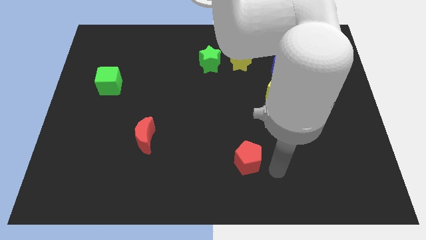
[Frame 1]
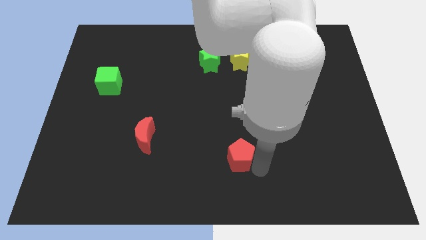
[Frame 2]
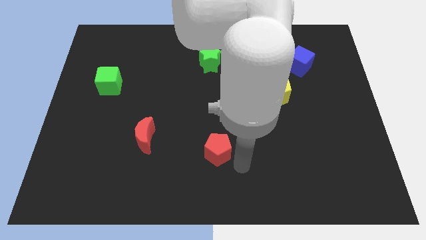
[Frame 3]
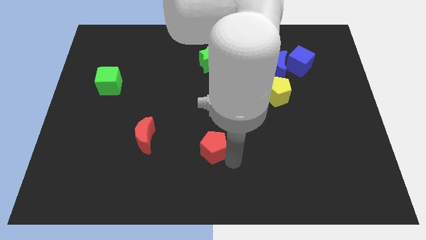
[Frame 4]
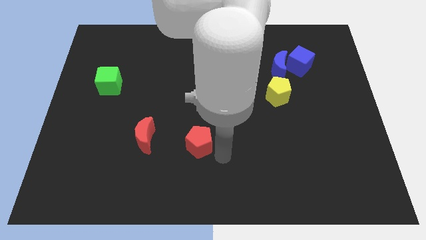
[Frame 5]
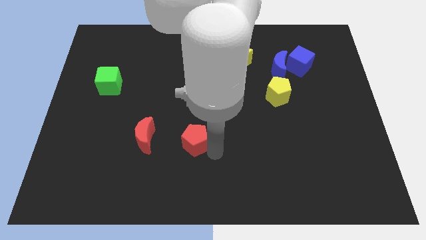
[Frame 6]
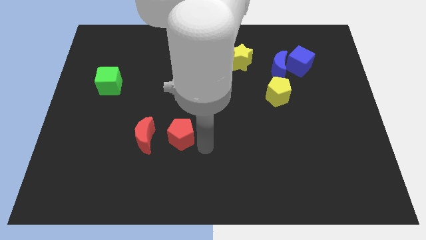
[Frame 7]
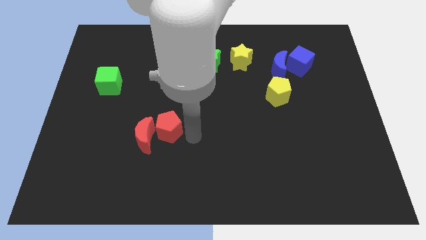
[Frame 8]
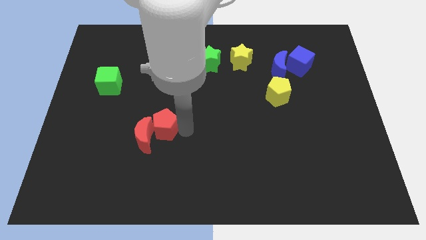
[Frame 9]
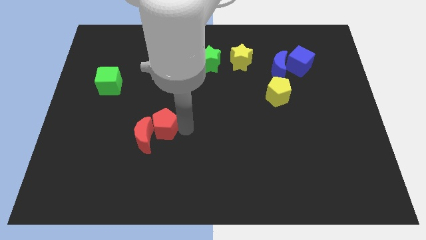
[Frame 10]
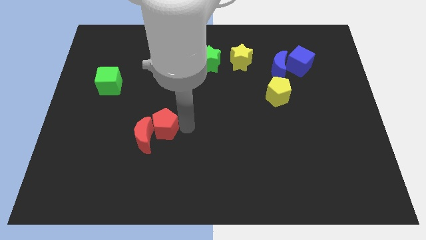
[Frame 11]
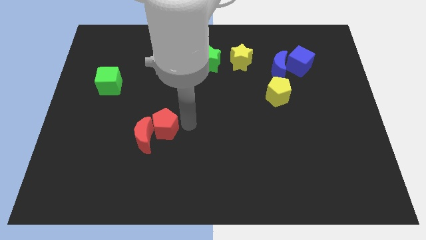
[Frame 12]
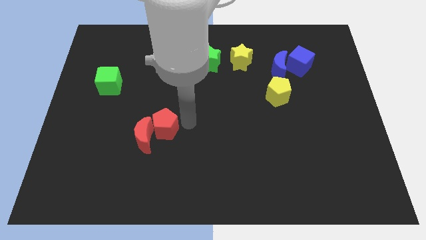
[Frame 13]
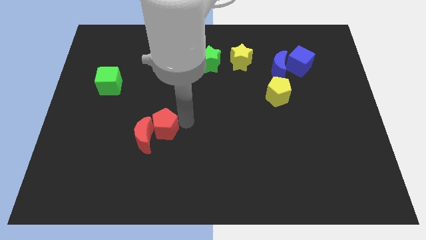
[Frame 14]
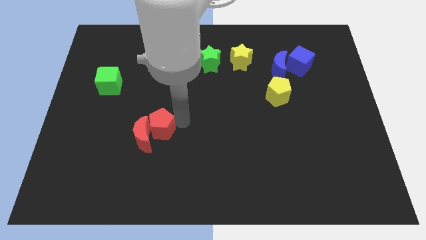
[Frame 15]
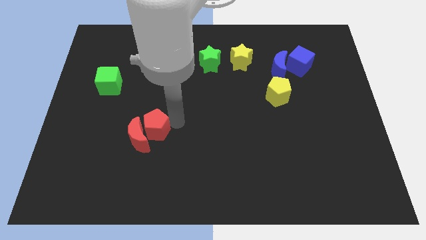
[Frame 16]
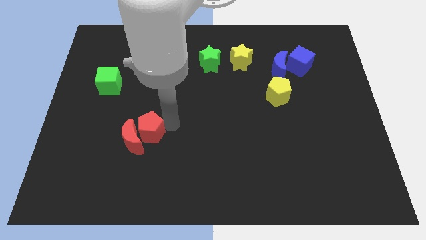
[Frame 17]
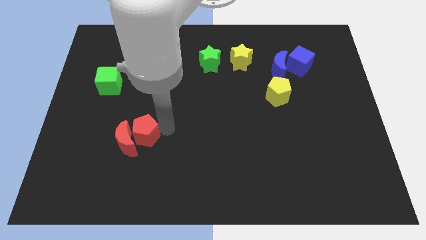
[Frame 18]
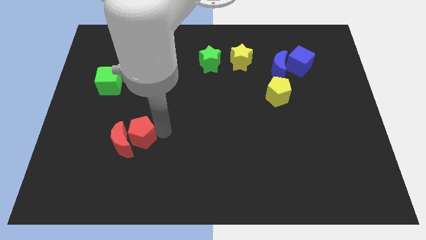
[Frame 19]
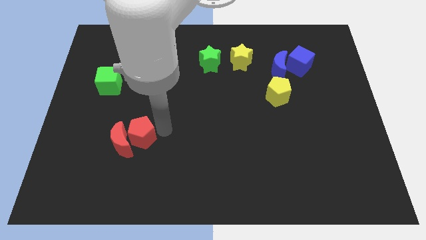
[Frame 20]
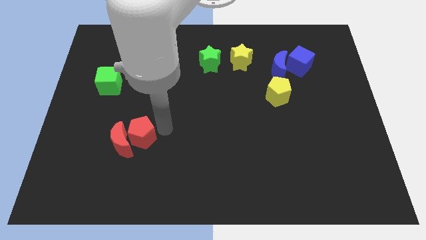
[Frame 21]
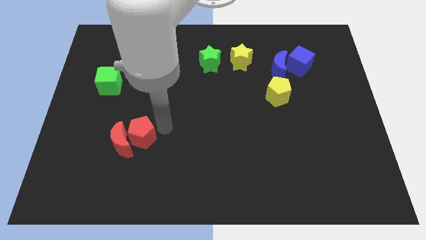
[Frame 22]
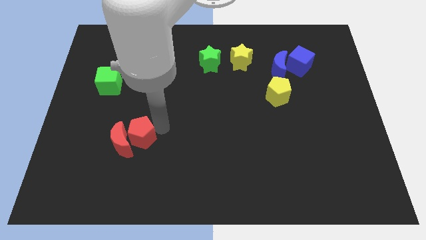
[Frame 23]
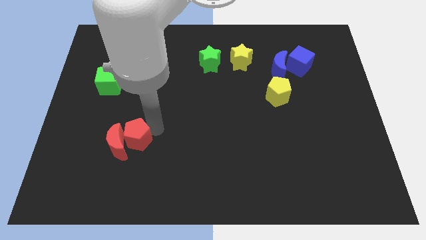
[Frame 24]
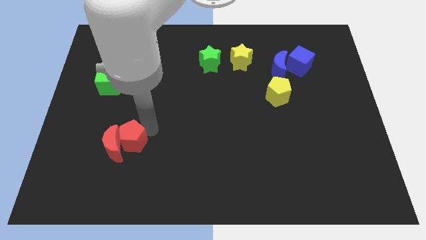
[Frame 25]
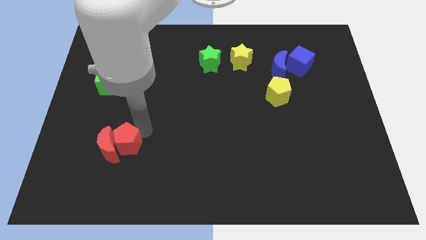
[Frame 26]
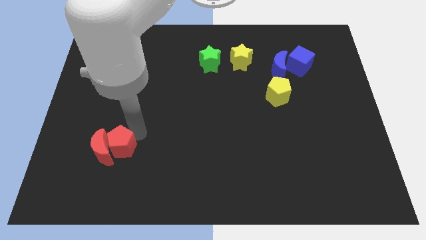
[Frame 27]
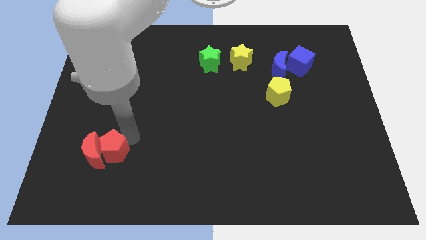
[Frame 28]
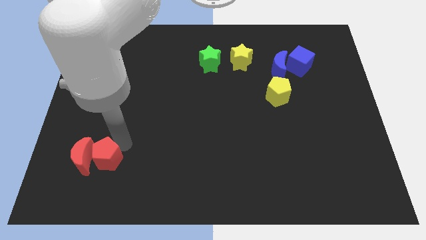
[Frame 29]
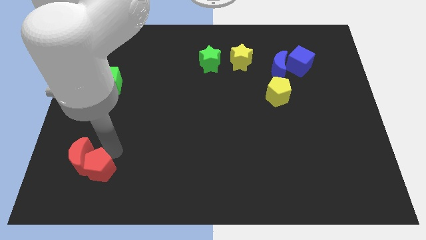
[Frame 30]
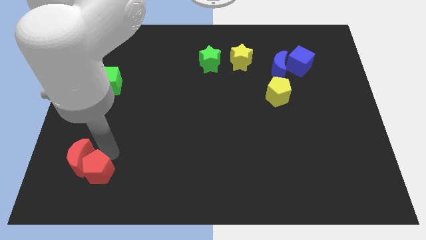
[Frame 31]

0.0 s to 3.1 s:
push the red pentagon into the red moon

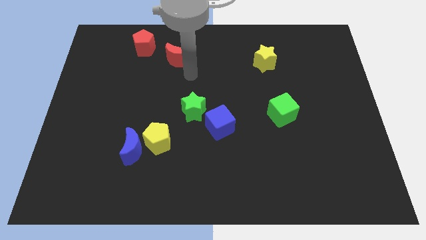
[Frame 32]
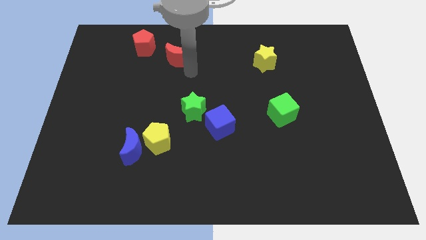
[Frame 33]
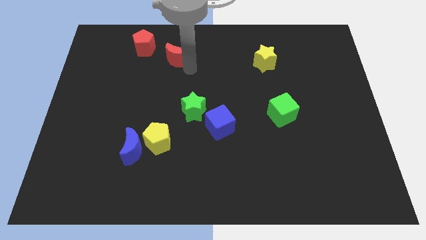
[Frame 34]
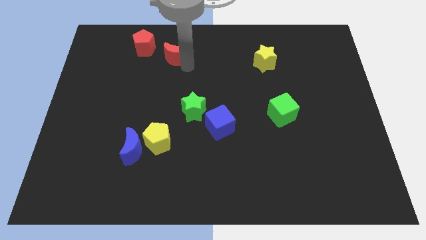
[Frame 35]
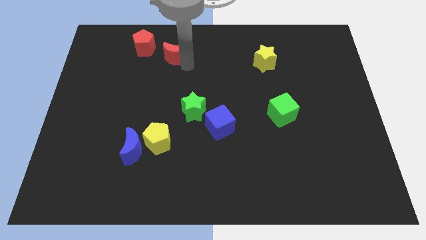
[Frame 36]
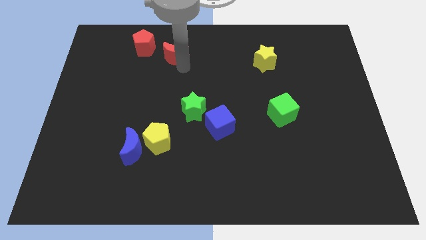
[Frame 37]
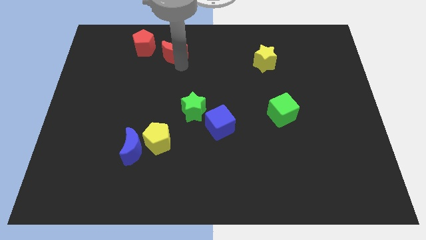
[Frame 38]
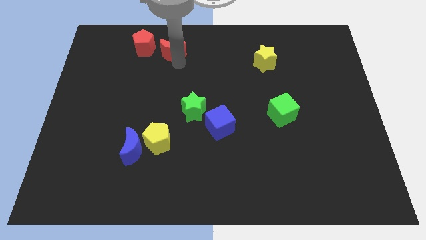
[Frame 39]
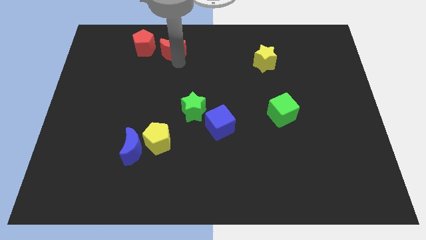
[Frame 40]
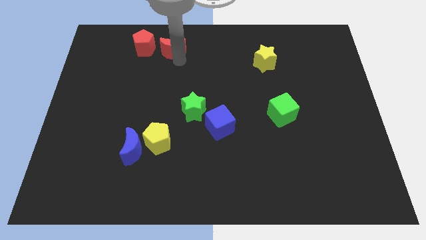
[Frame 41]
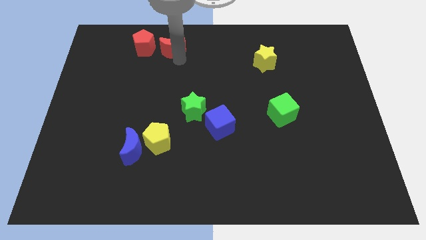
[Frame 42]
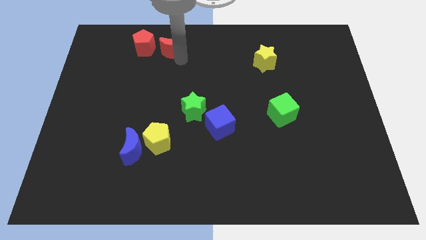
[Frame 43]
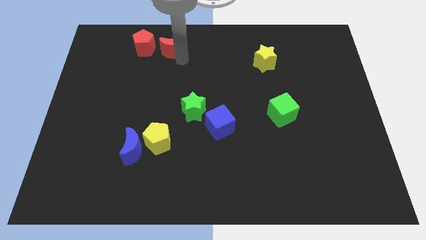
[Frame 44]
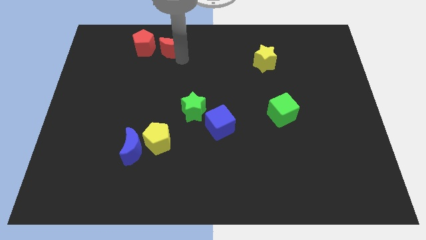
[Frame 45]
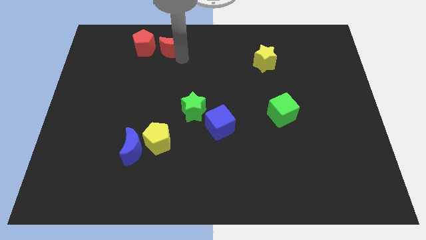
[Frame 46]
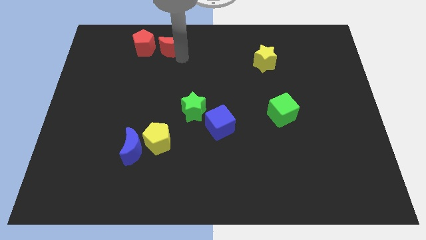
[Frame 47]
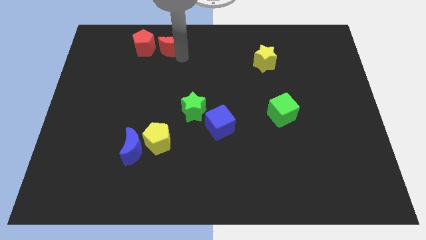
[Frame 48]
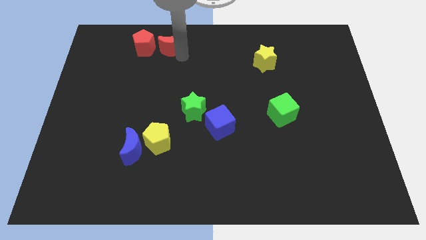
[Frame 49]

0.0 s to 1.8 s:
put the red moon right to the red pentagon

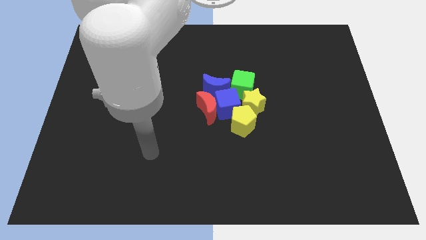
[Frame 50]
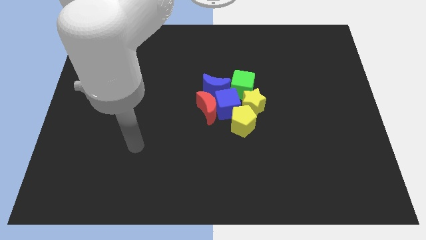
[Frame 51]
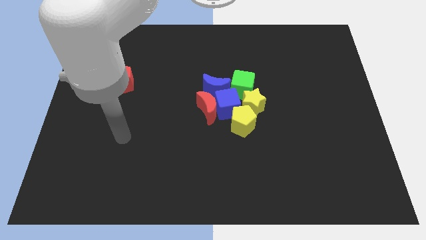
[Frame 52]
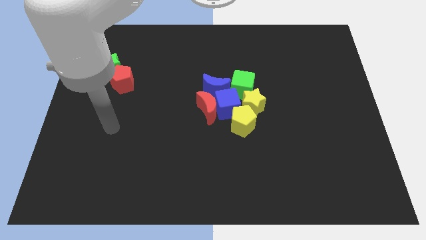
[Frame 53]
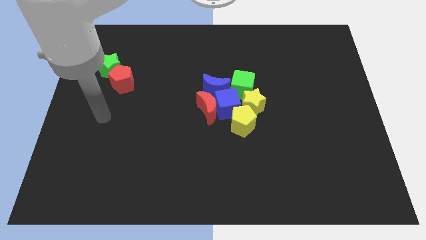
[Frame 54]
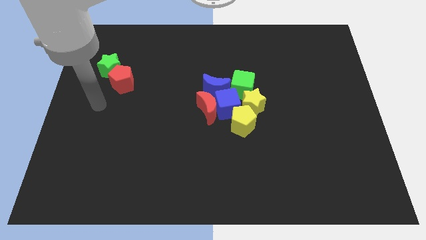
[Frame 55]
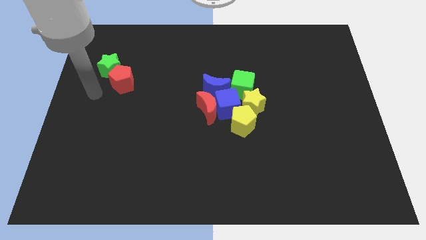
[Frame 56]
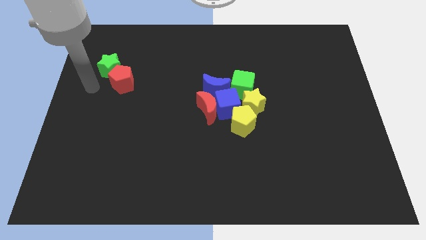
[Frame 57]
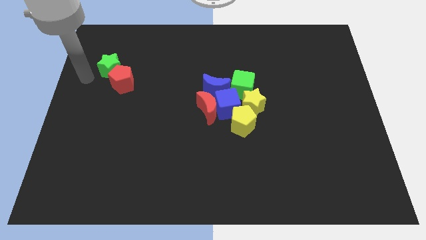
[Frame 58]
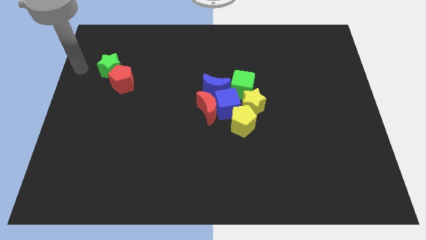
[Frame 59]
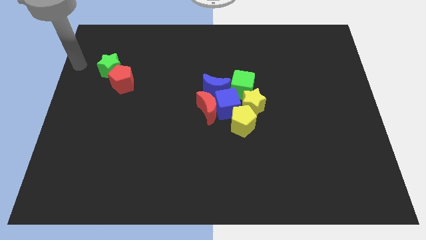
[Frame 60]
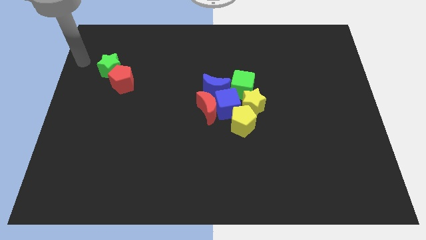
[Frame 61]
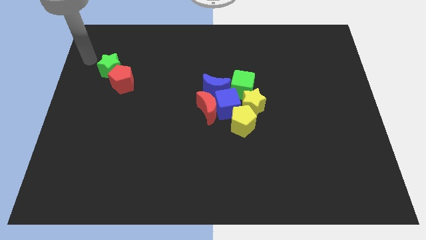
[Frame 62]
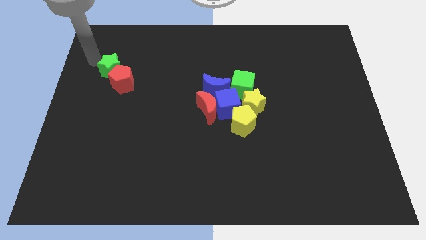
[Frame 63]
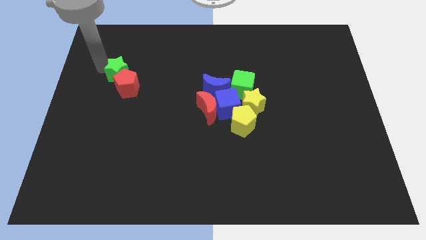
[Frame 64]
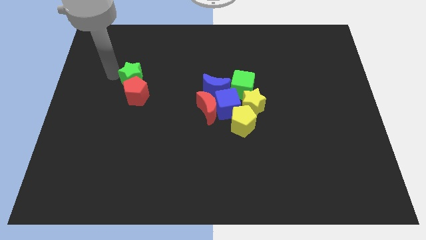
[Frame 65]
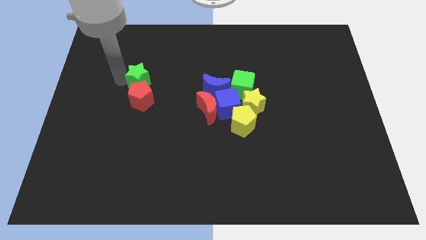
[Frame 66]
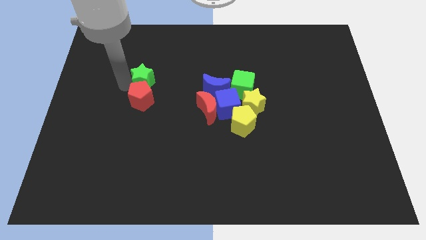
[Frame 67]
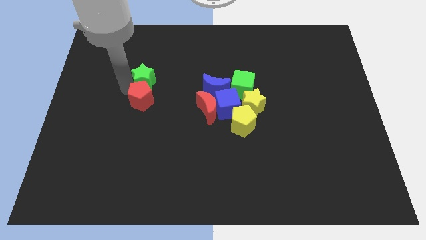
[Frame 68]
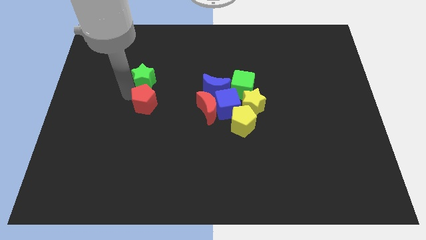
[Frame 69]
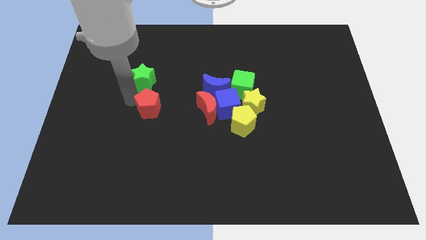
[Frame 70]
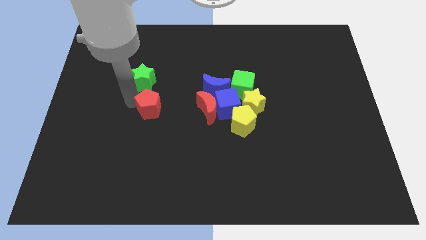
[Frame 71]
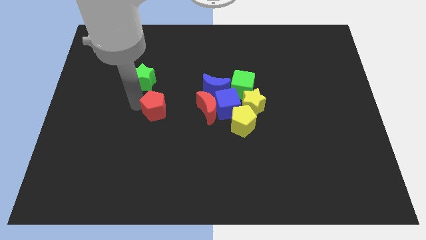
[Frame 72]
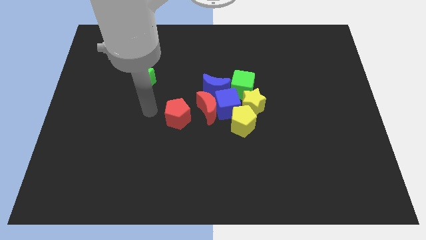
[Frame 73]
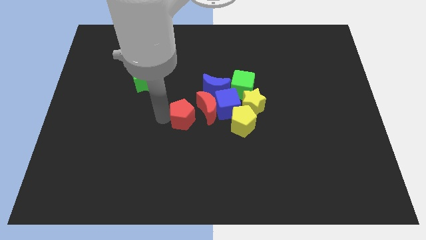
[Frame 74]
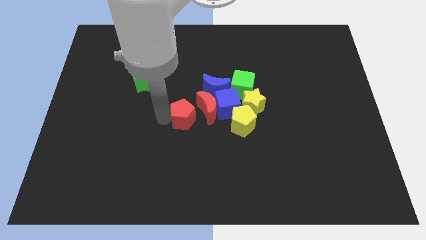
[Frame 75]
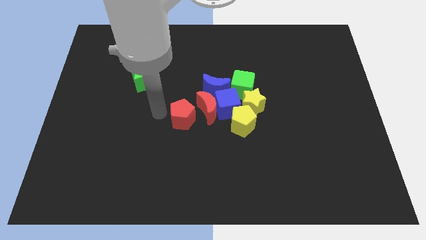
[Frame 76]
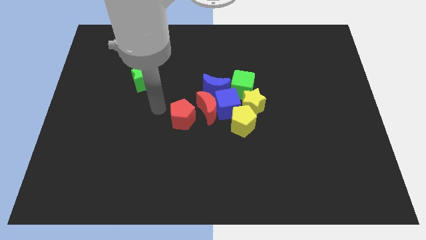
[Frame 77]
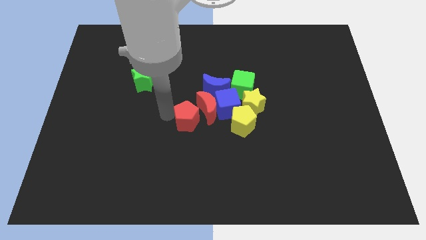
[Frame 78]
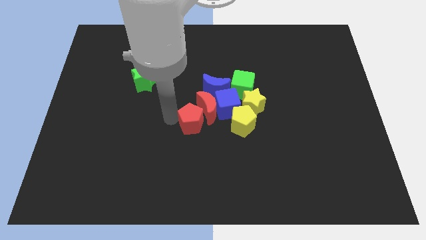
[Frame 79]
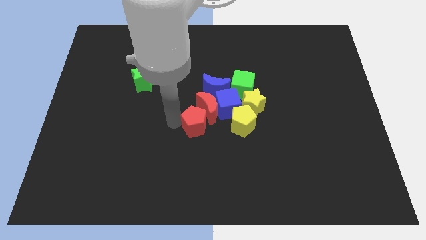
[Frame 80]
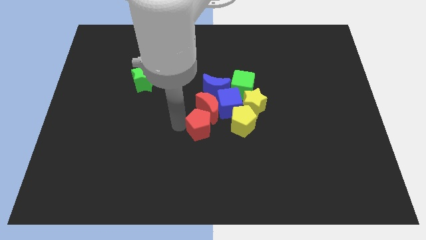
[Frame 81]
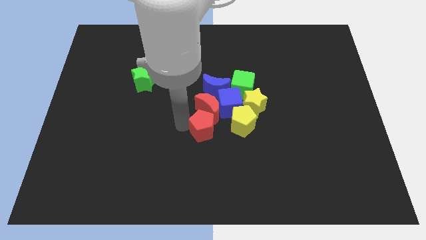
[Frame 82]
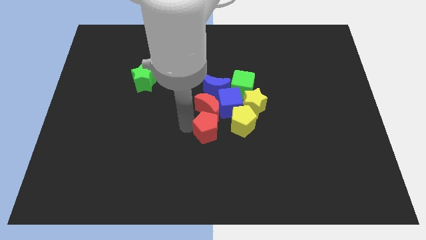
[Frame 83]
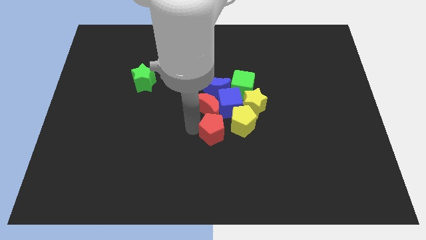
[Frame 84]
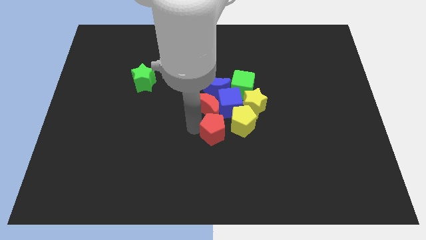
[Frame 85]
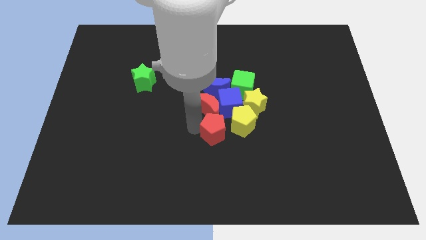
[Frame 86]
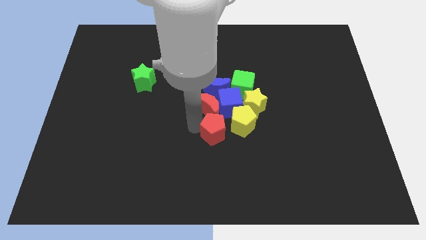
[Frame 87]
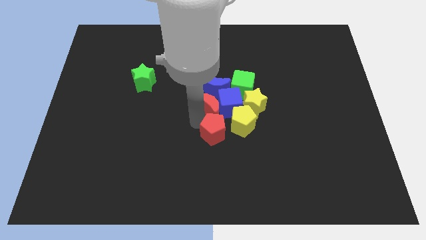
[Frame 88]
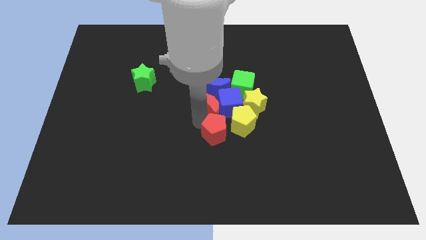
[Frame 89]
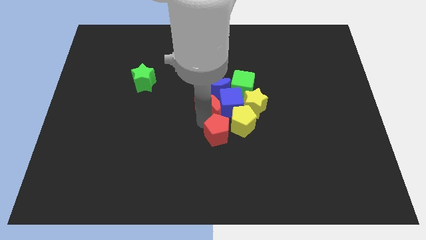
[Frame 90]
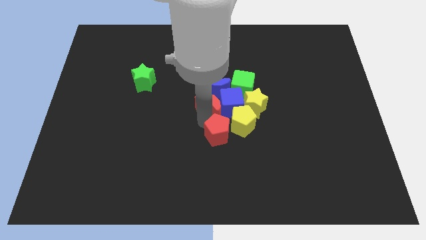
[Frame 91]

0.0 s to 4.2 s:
push the red pentagon into the red crescent
